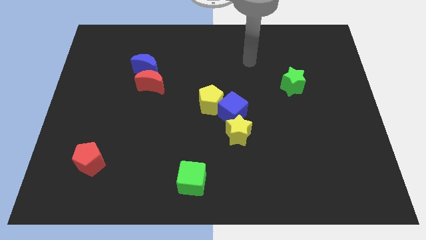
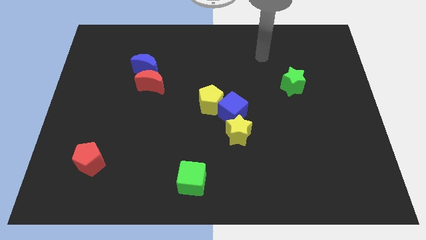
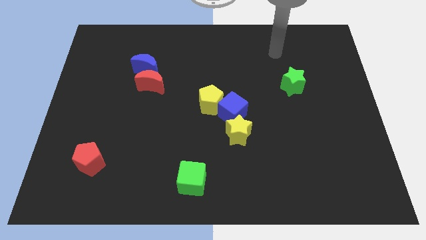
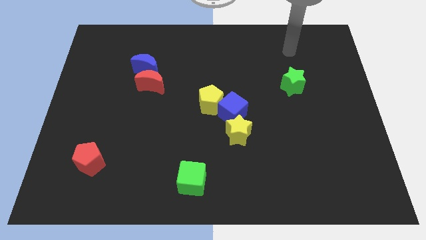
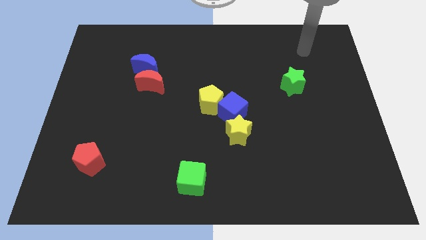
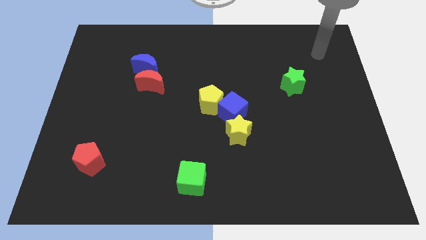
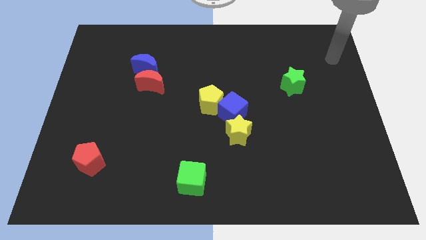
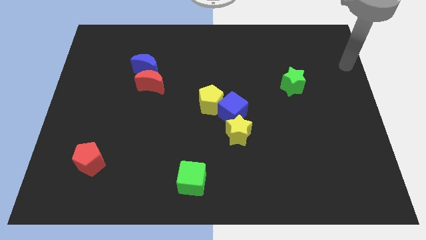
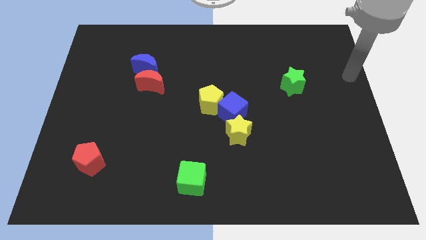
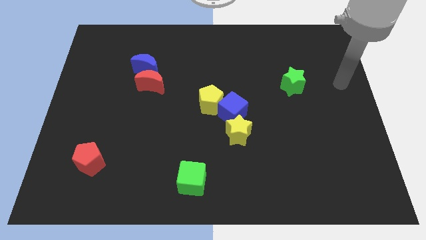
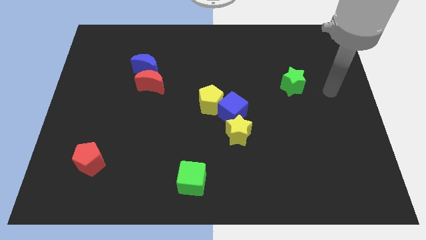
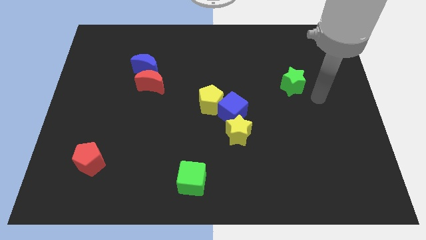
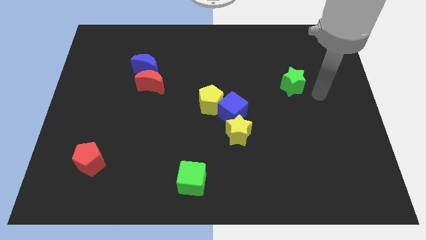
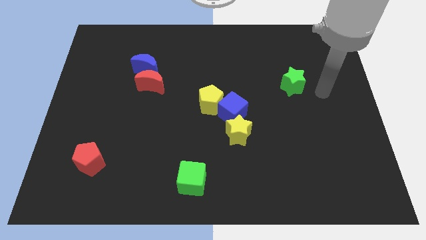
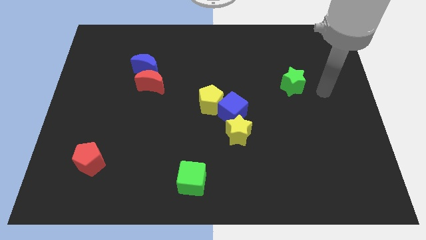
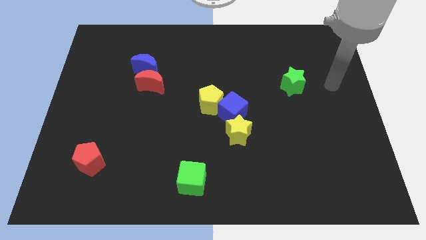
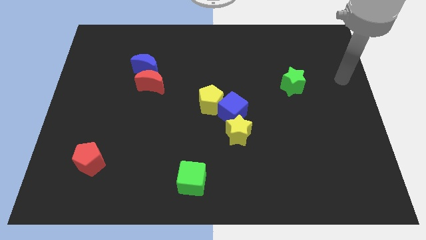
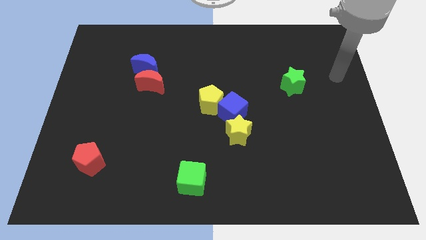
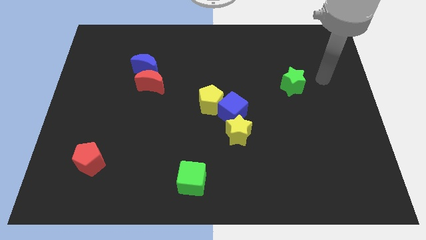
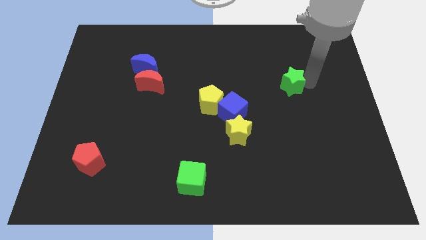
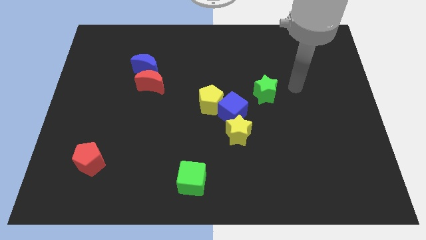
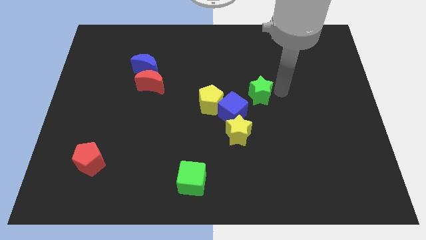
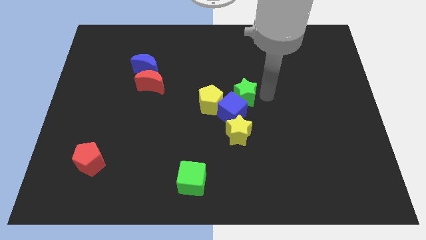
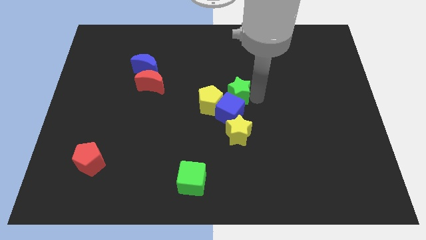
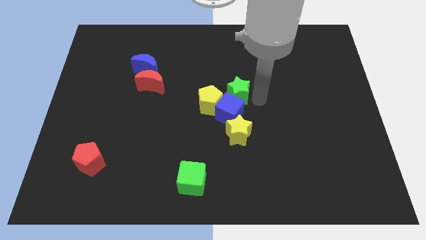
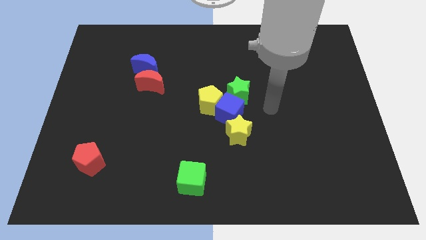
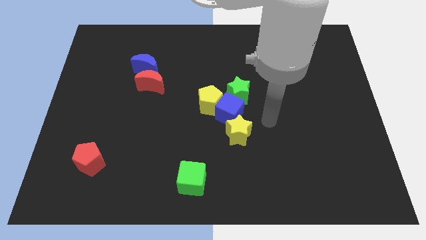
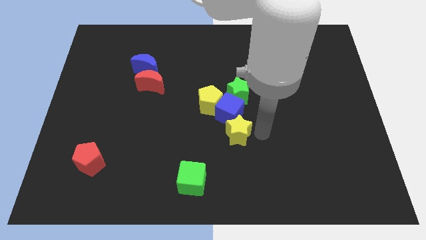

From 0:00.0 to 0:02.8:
move green star diagonally above blue cube

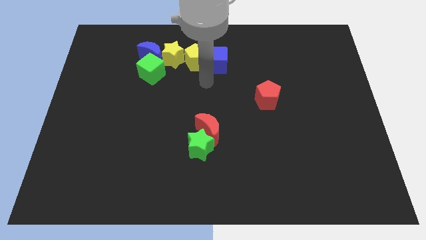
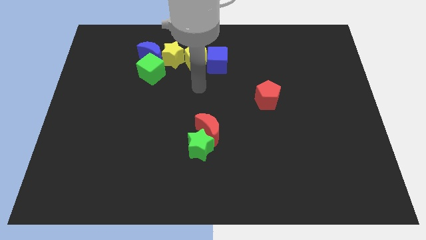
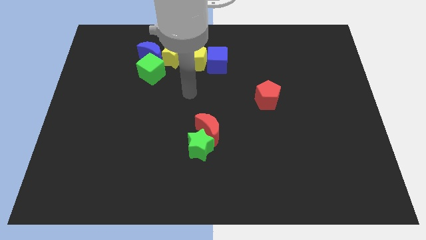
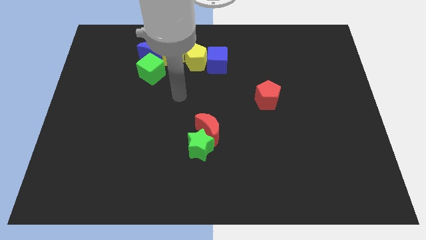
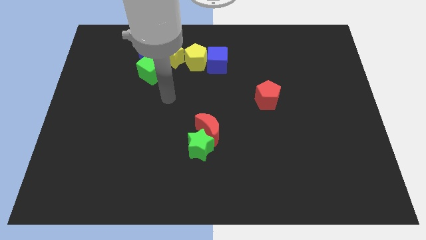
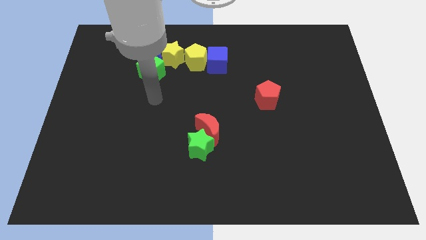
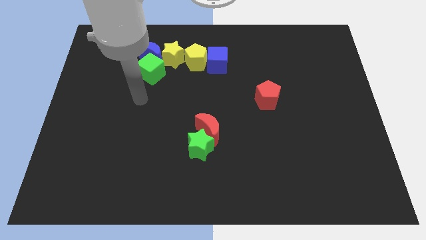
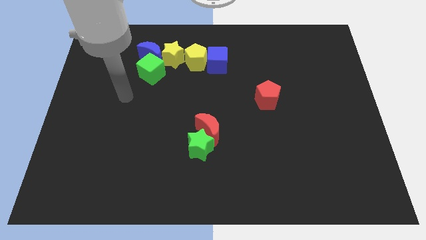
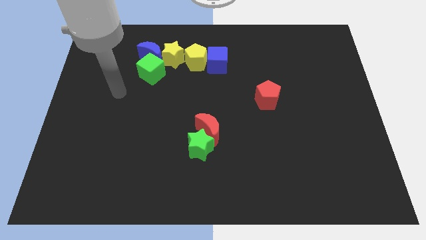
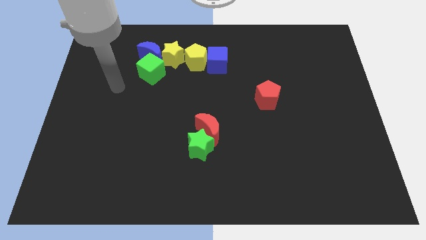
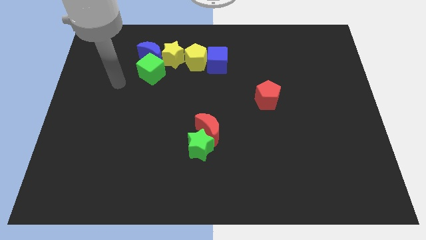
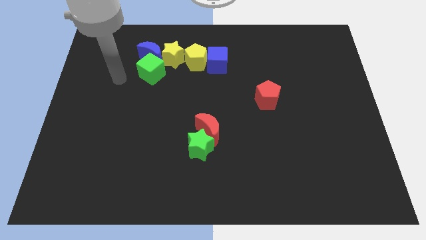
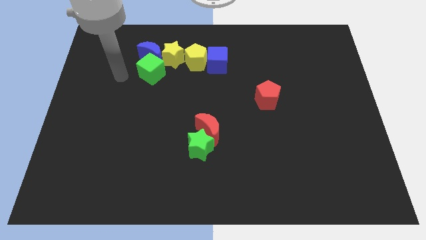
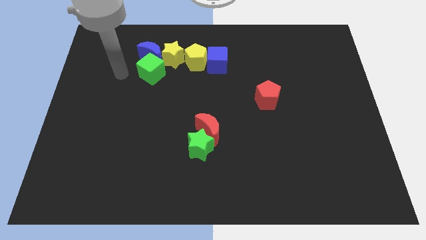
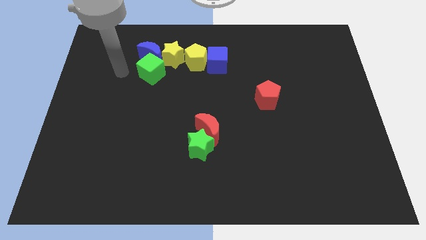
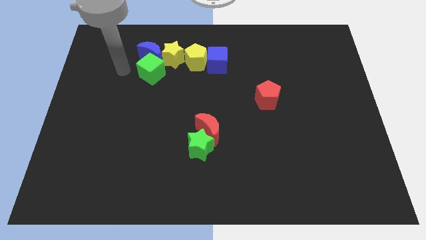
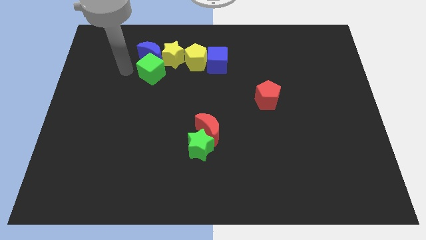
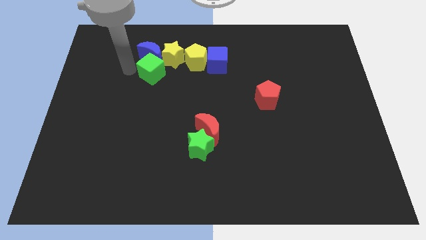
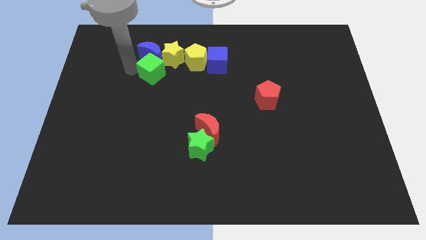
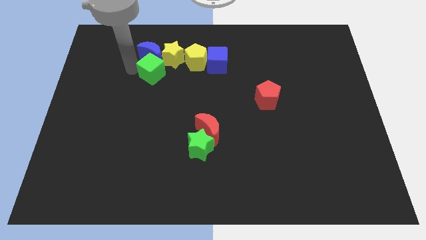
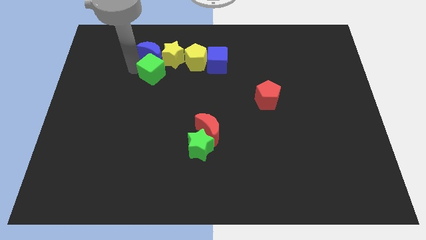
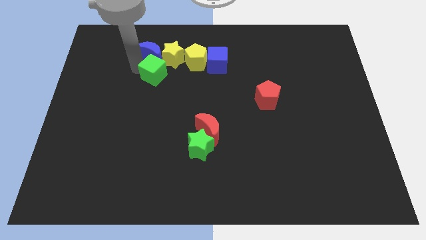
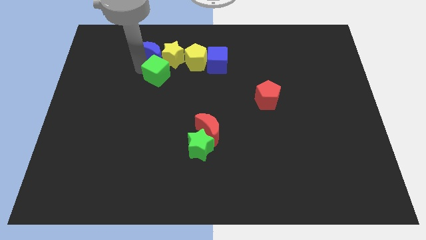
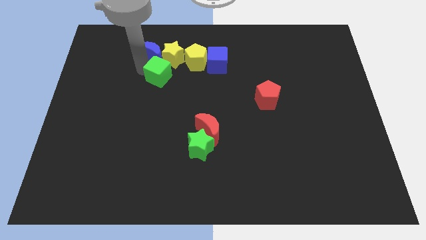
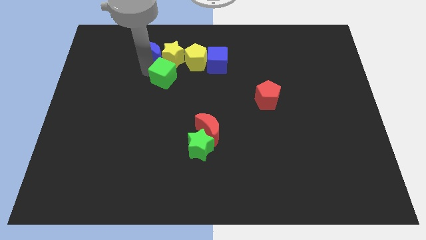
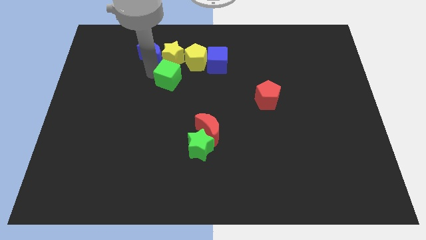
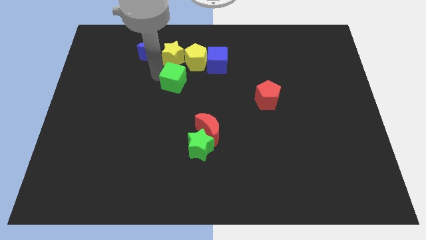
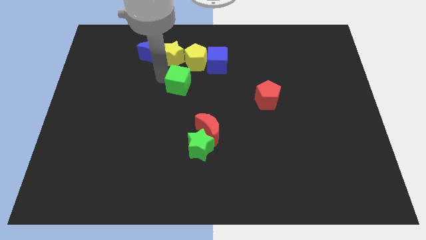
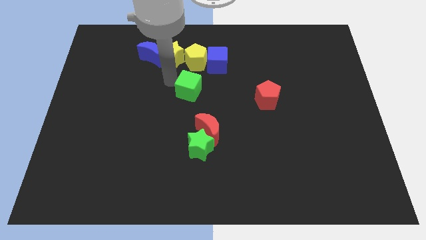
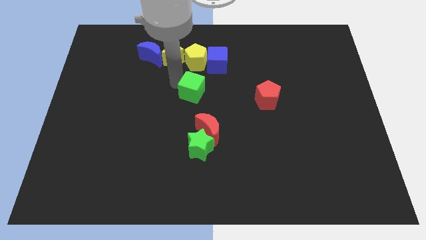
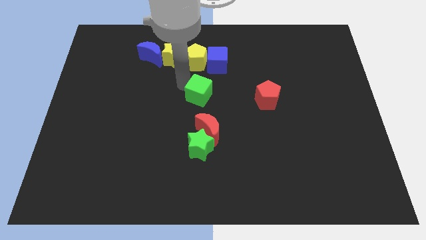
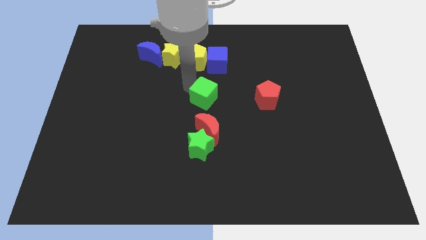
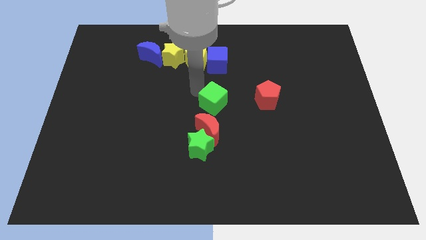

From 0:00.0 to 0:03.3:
push the green cube to the center of the board

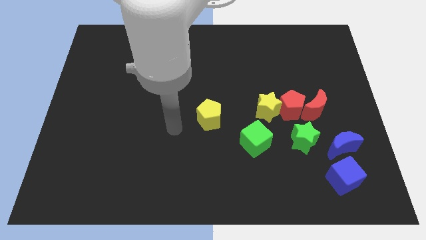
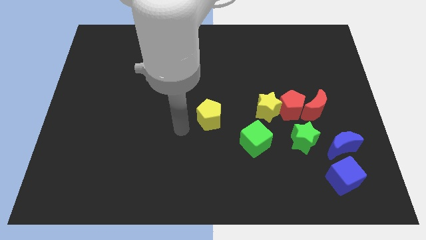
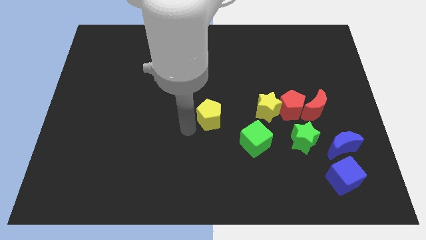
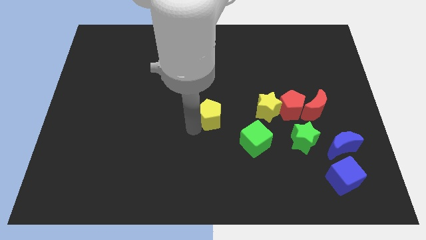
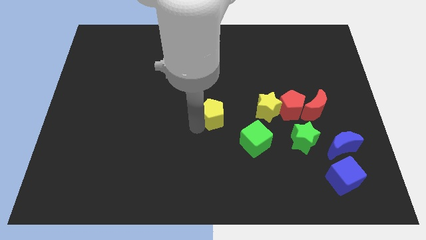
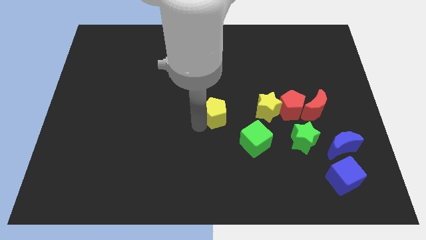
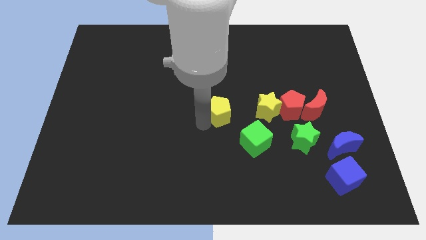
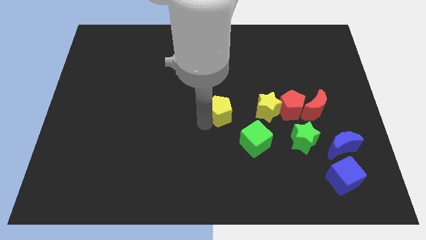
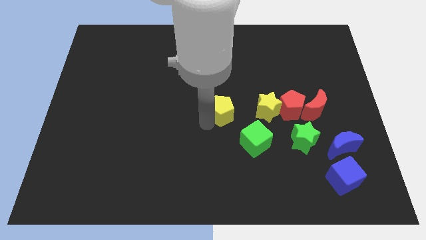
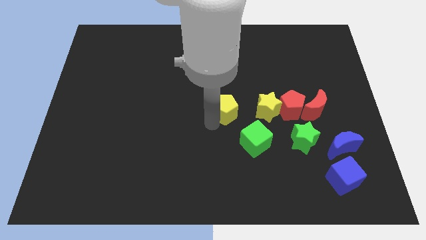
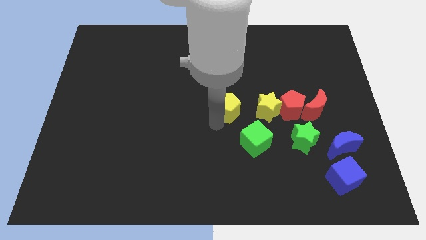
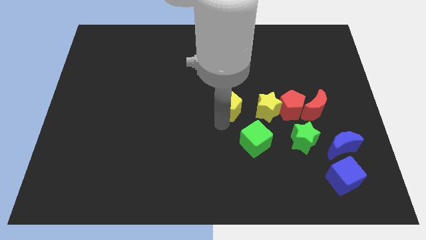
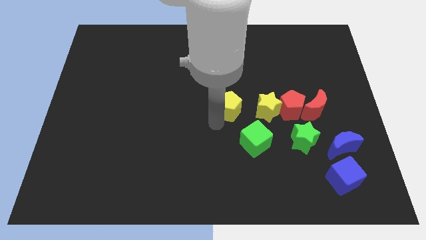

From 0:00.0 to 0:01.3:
move yellow pentagon towards yellow star

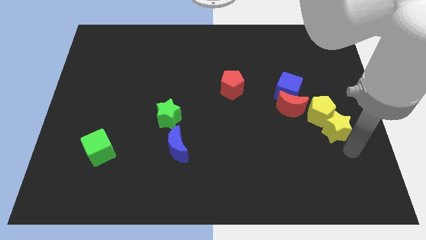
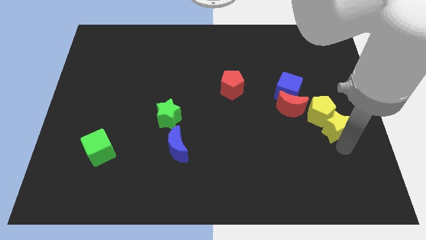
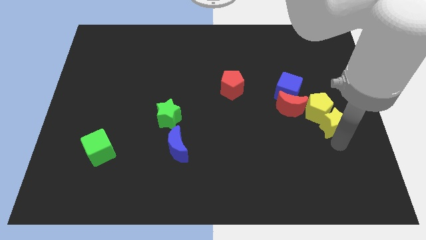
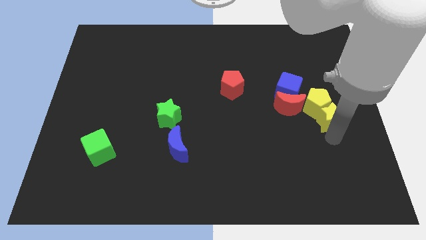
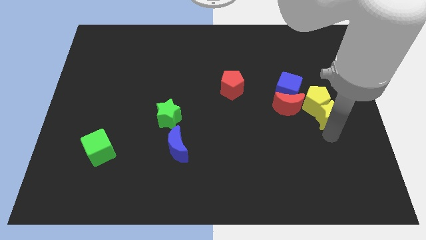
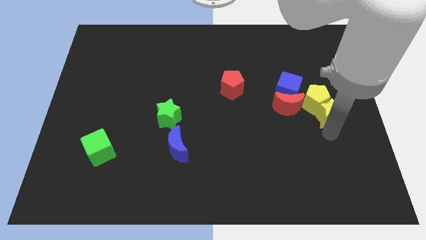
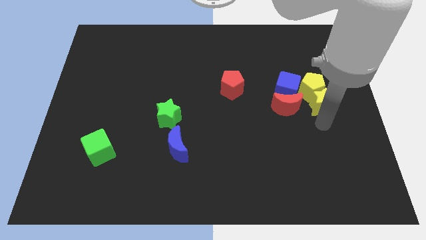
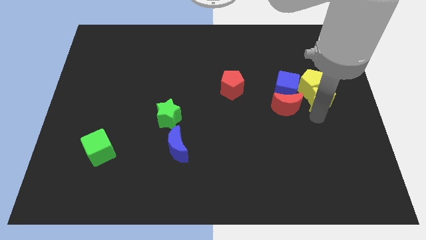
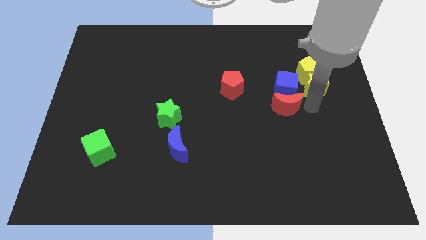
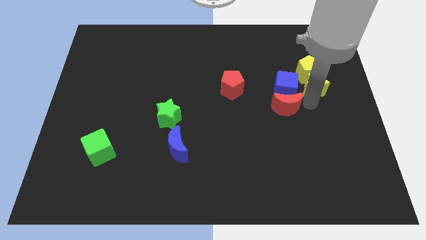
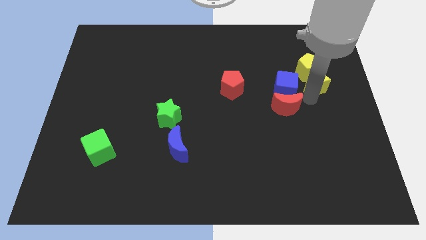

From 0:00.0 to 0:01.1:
push the yellow blocks towards the top side of the board

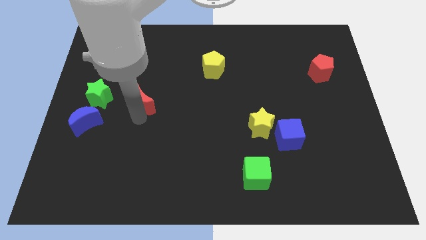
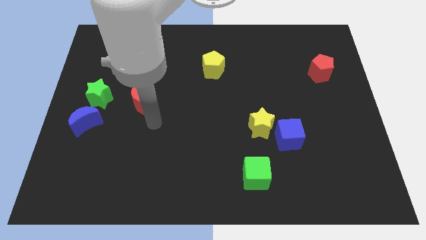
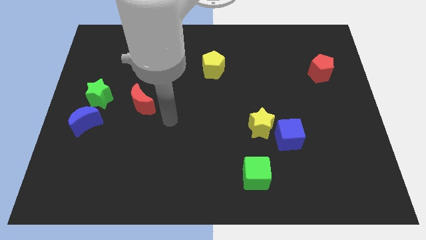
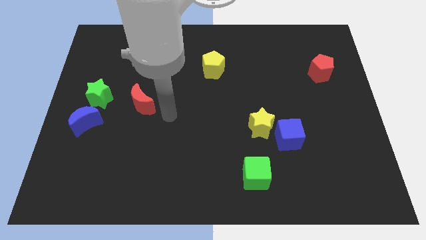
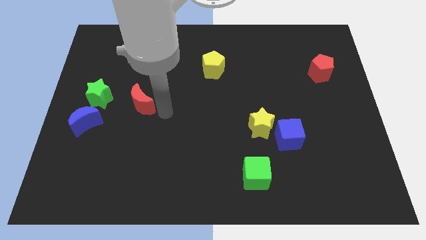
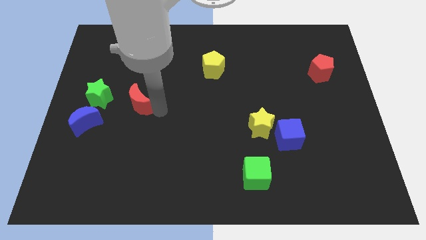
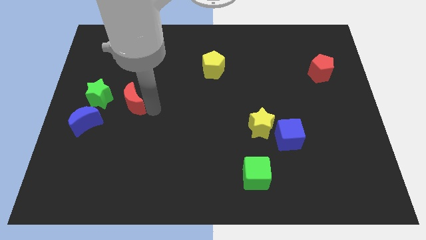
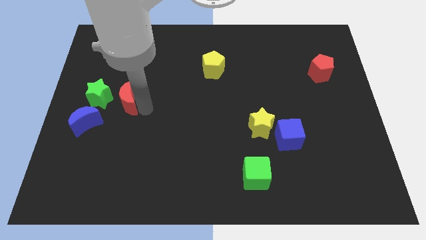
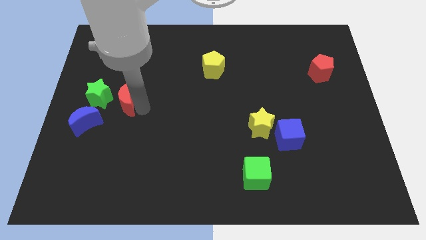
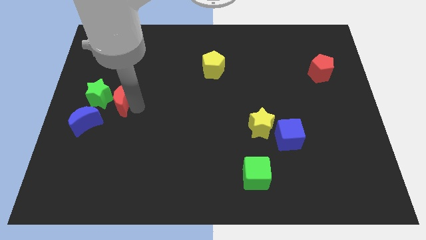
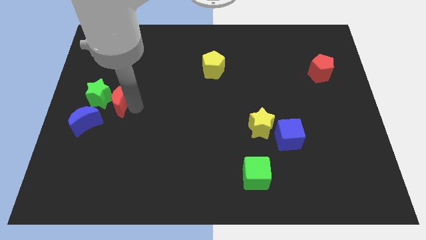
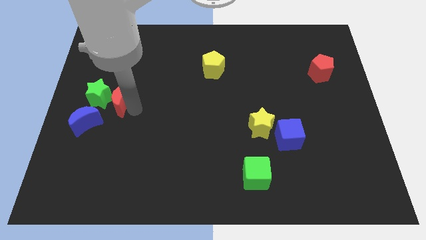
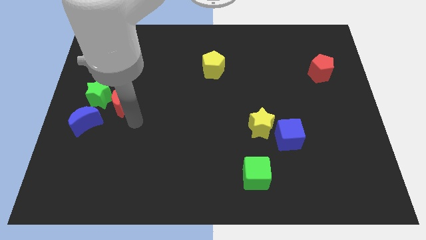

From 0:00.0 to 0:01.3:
move the red moon close to the green star
